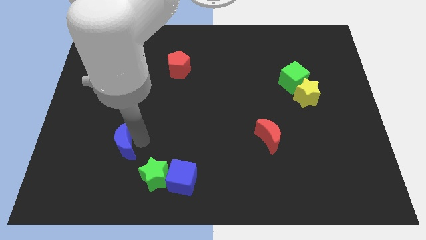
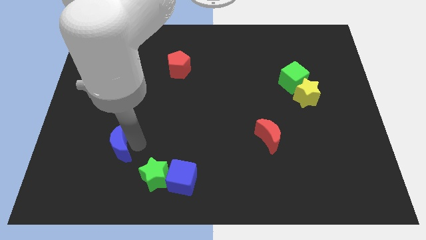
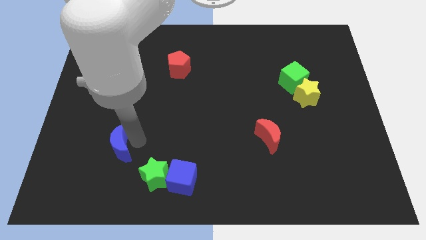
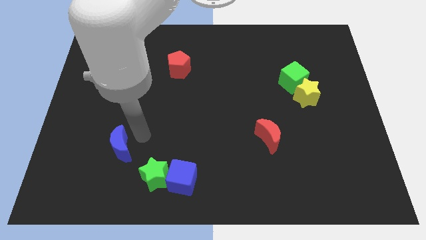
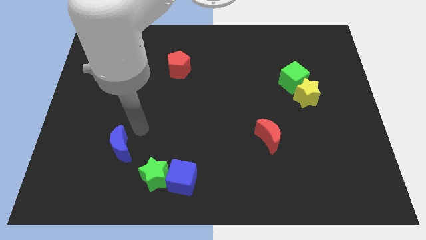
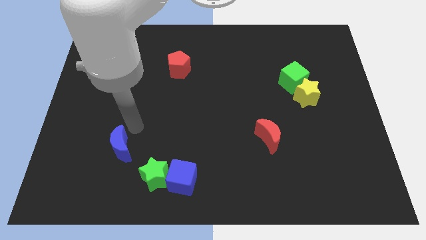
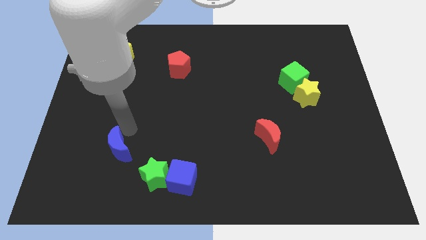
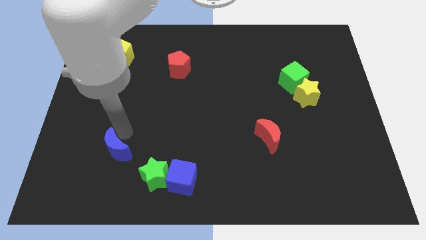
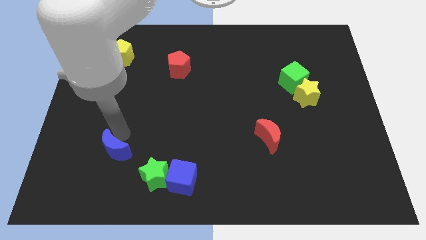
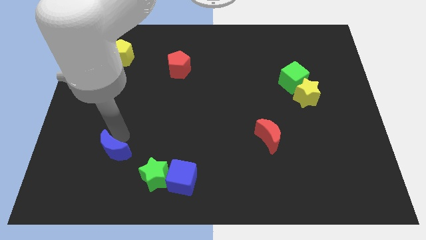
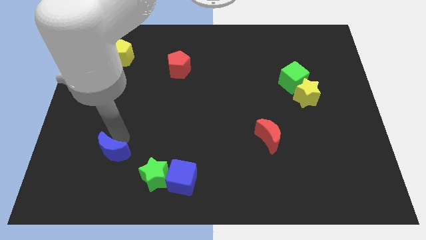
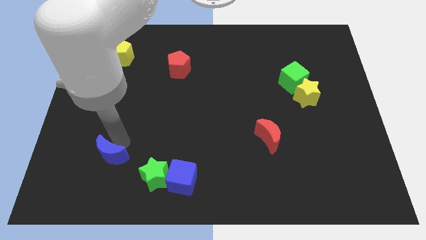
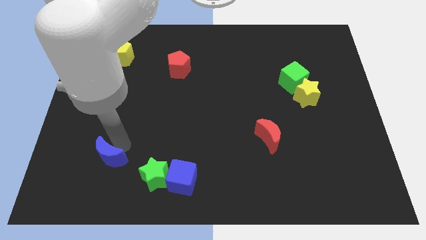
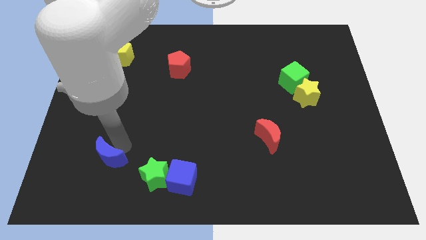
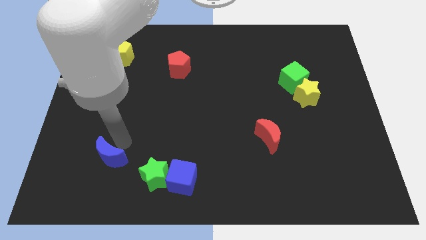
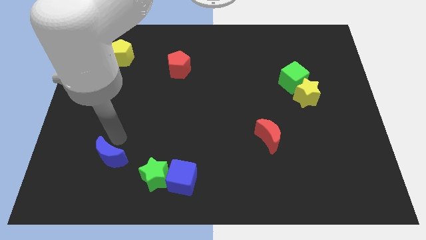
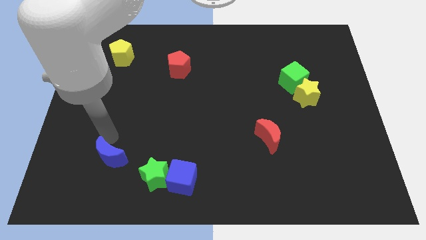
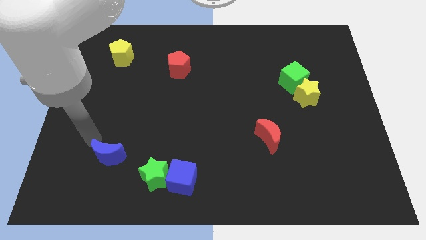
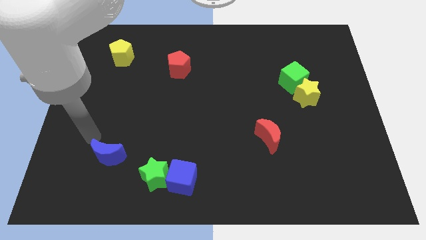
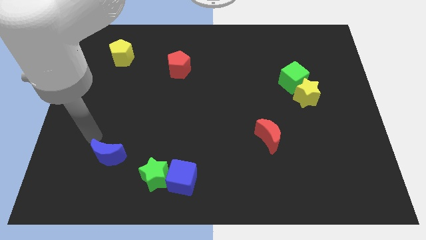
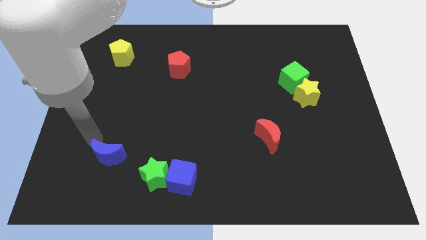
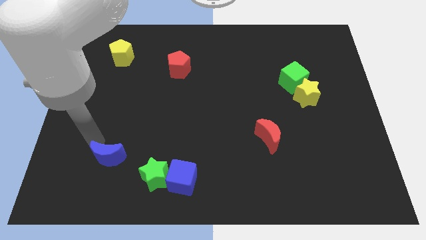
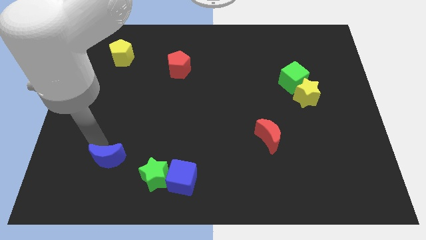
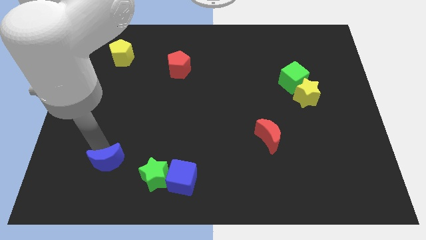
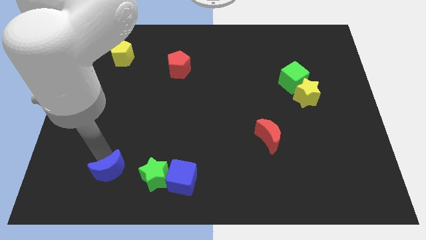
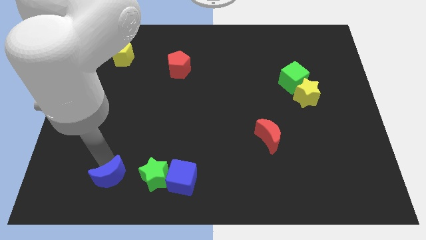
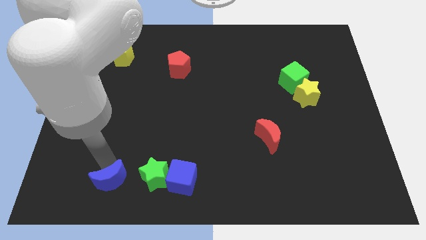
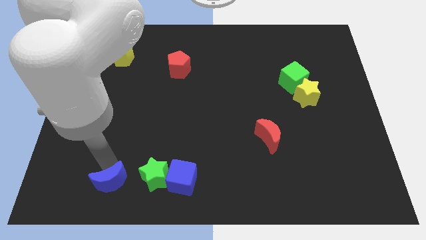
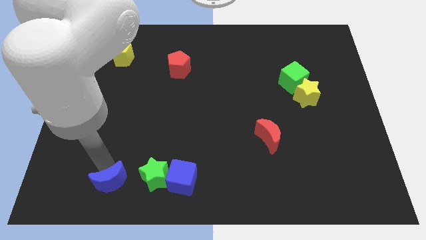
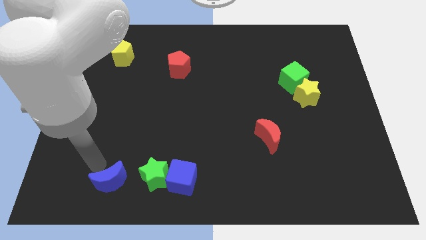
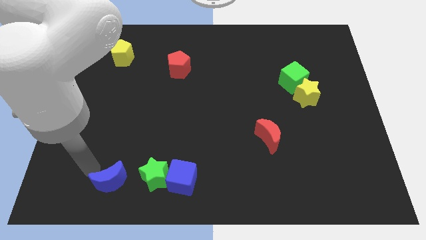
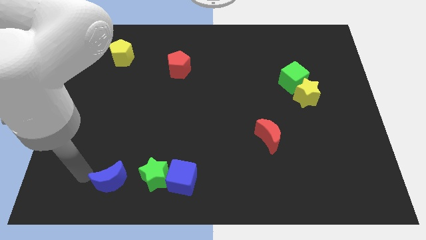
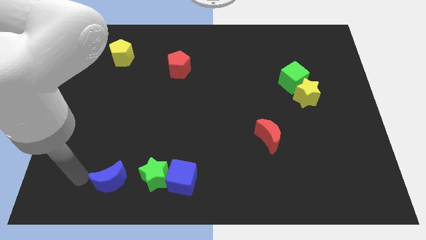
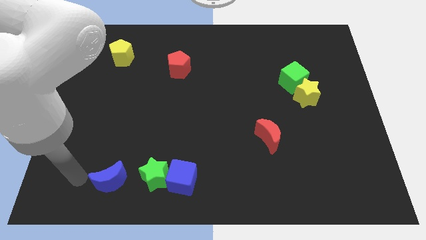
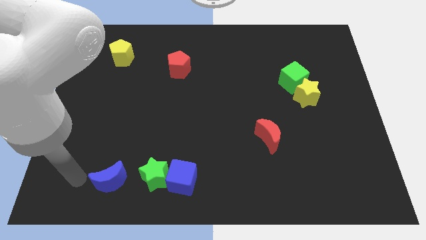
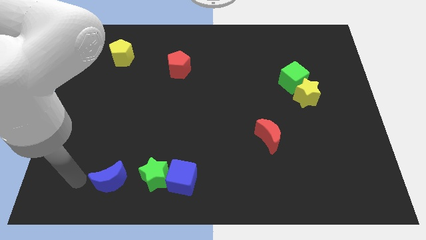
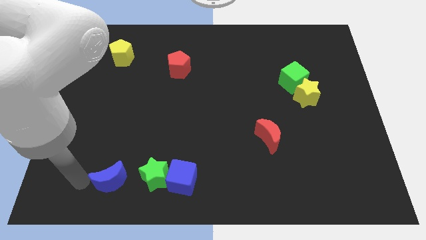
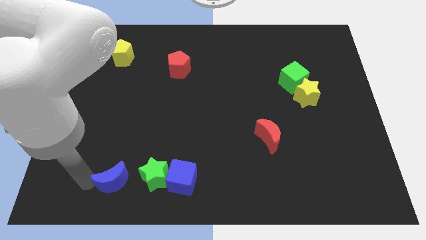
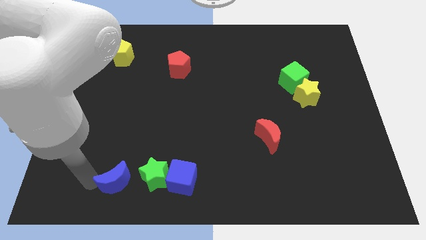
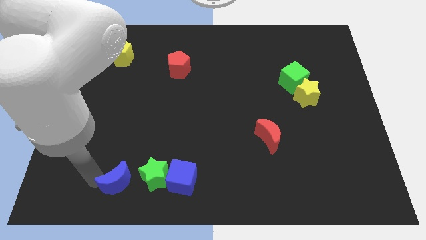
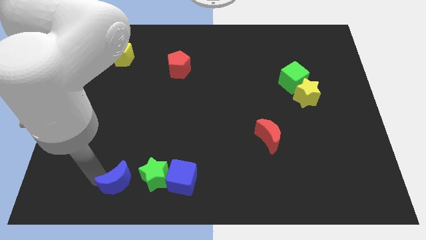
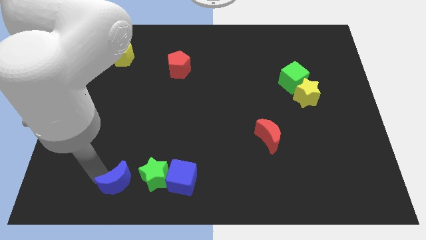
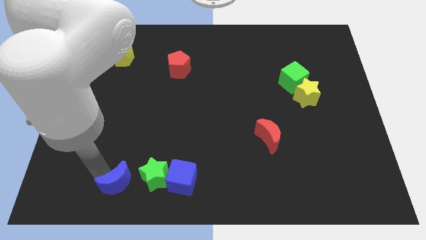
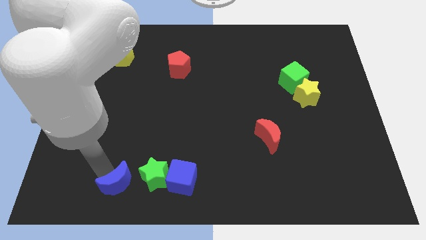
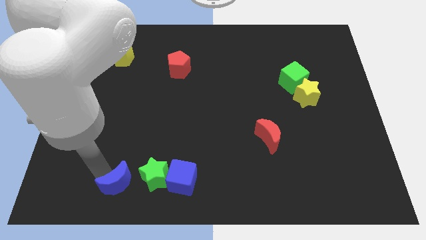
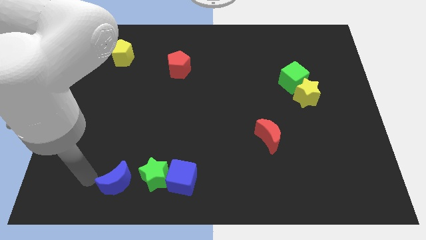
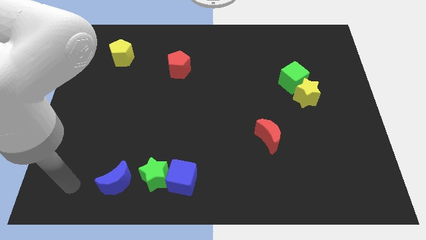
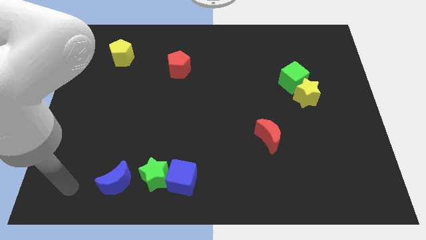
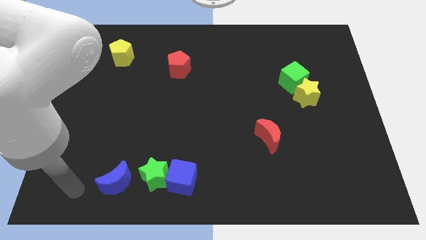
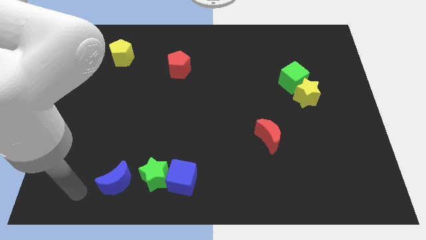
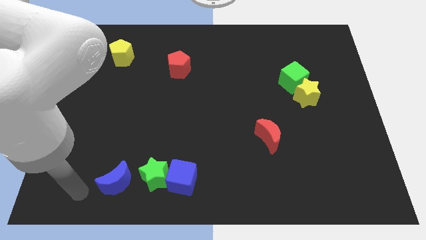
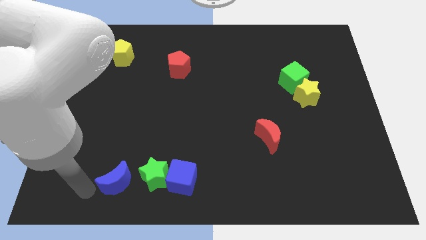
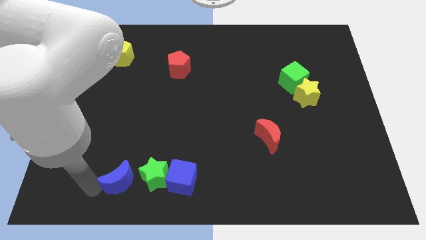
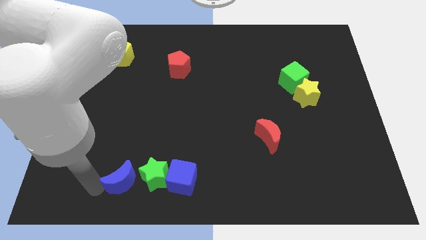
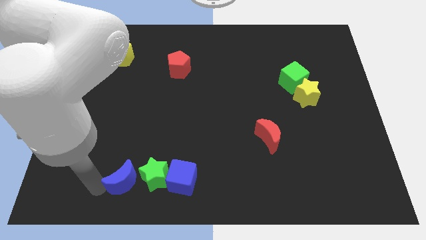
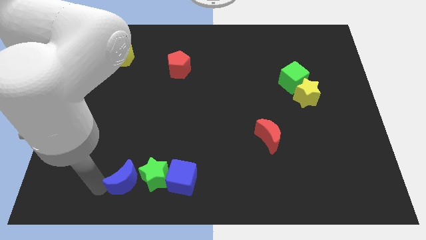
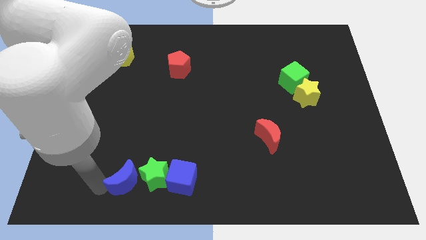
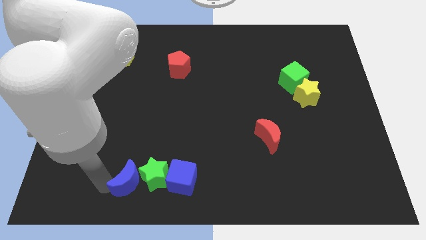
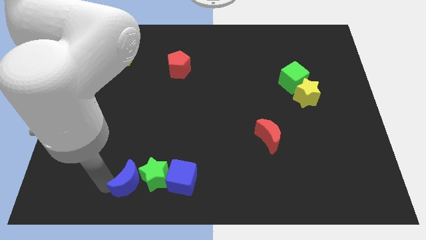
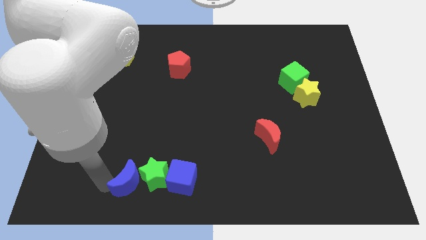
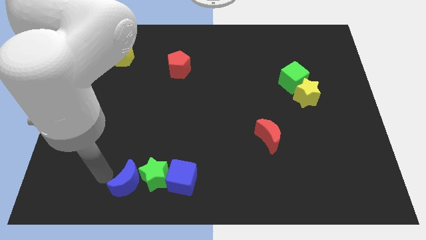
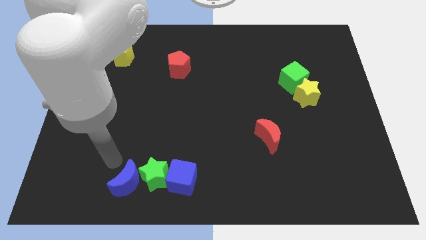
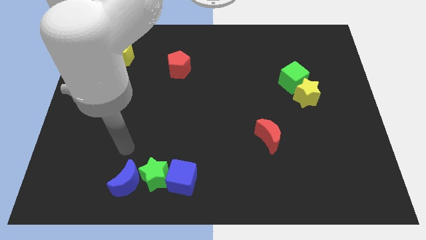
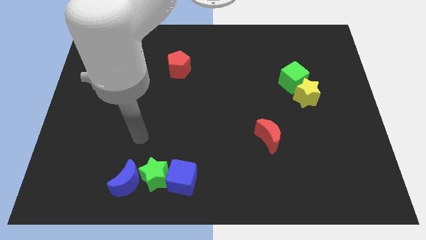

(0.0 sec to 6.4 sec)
move the blue moon left to the green star

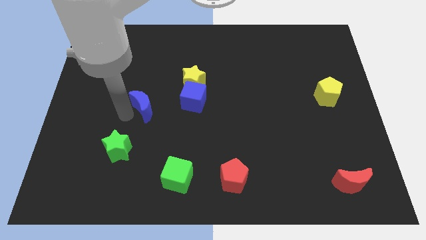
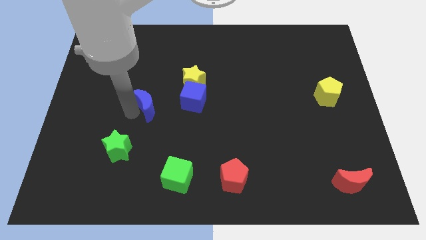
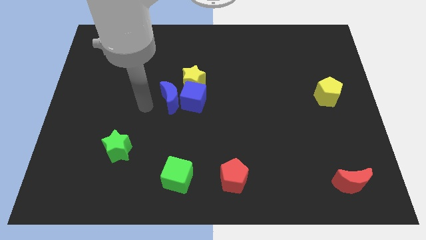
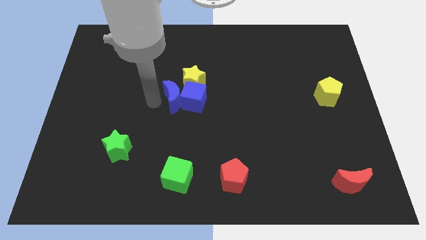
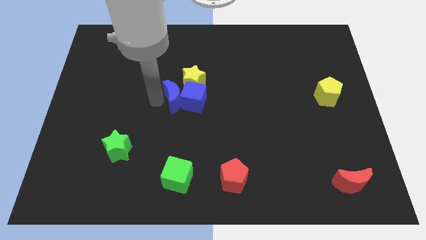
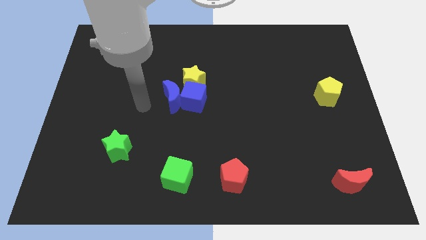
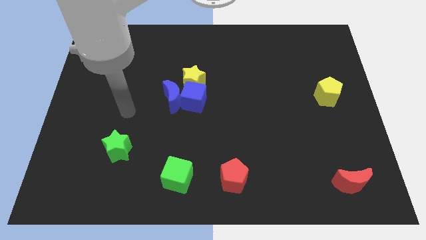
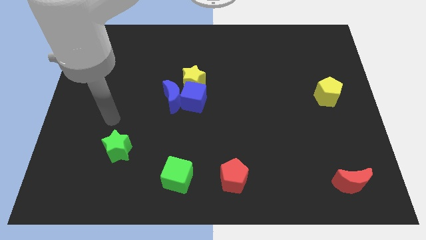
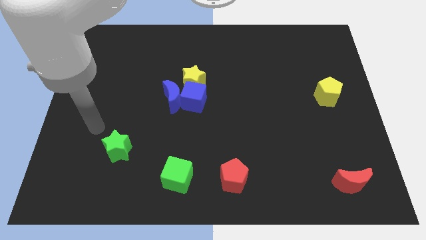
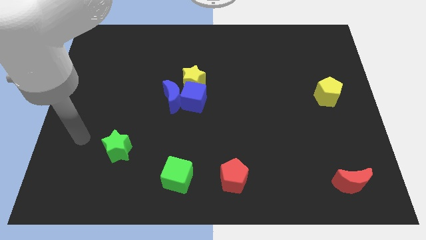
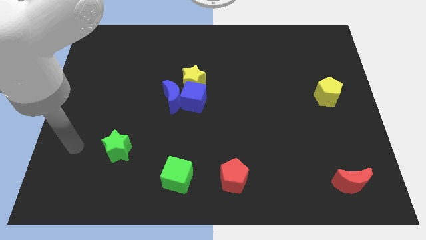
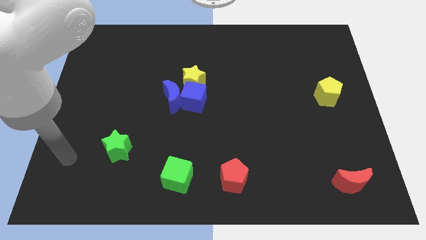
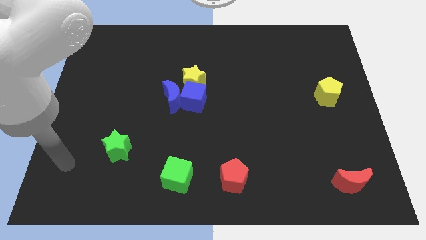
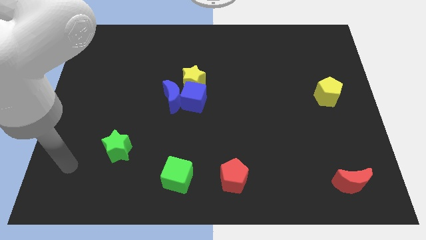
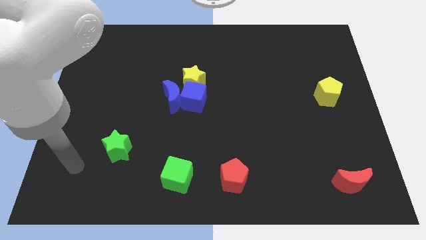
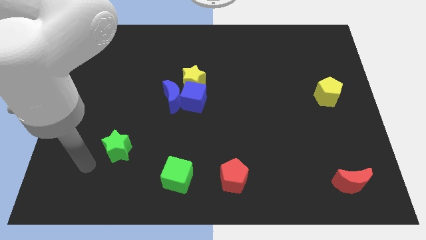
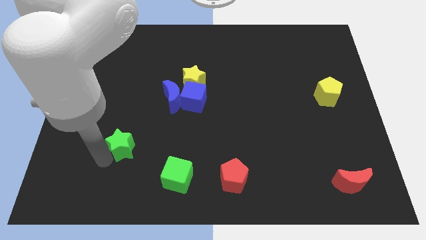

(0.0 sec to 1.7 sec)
move the blue crescent to the left side of the blue cube

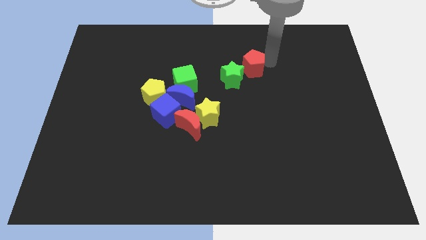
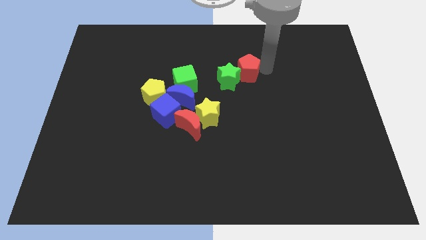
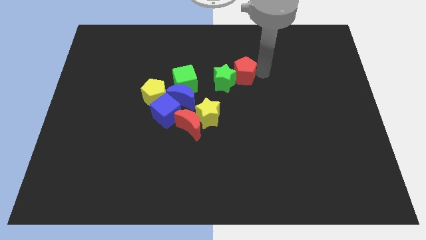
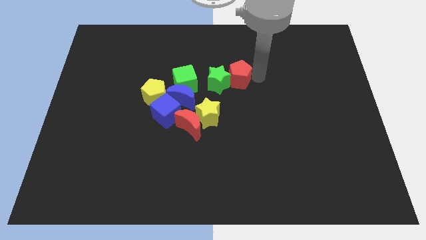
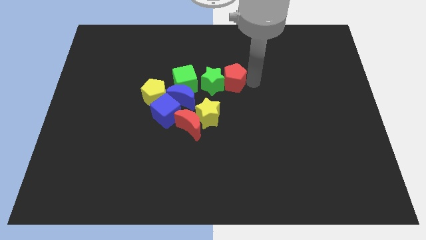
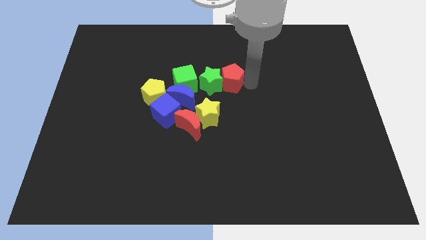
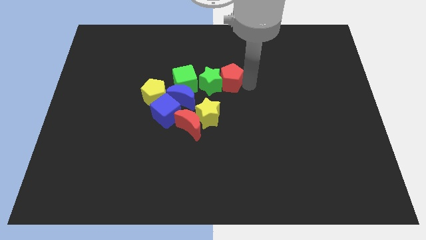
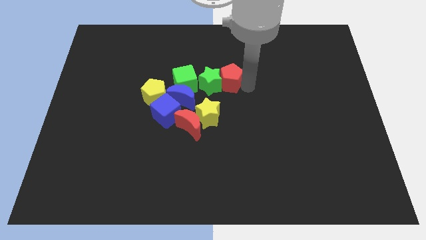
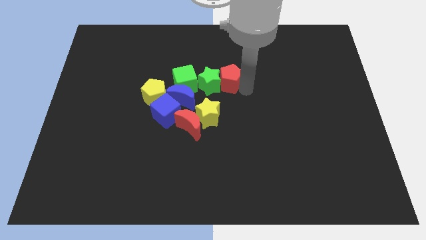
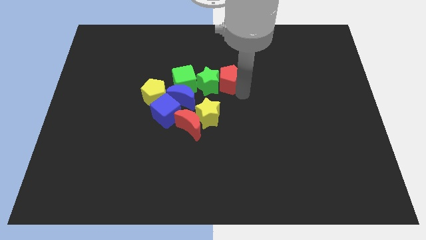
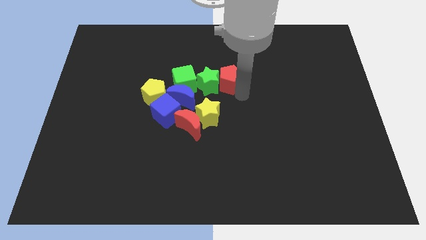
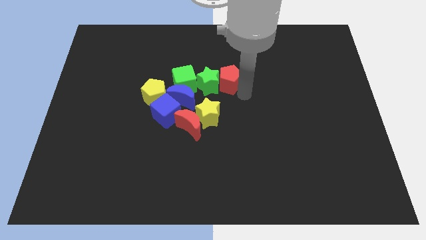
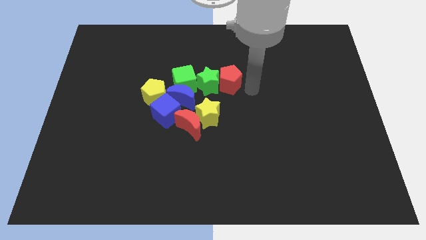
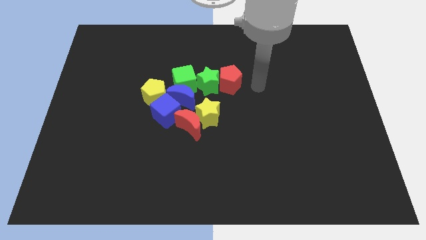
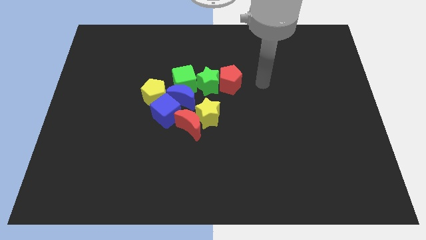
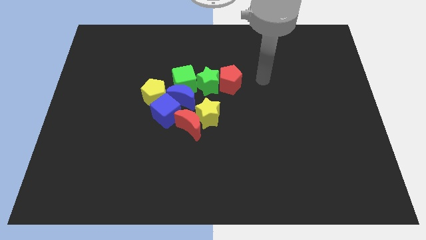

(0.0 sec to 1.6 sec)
push the red pentagon and green star to the right side of the green cube
